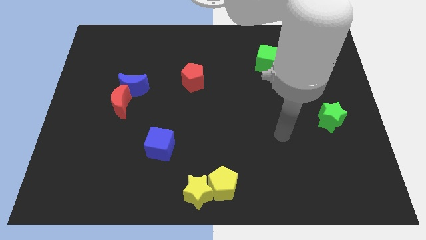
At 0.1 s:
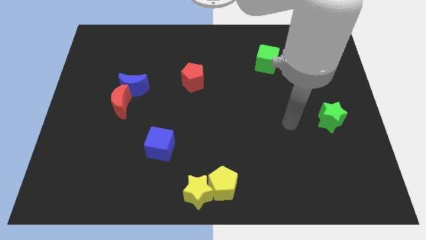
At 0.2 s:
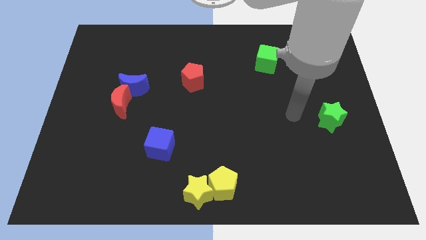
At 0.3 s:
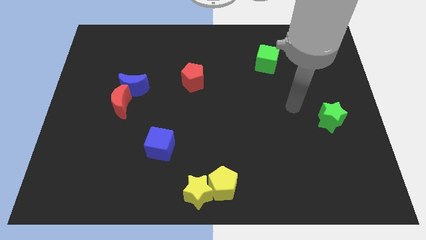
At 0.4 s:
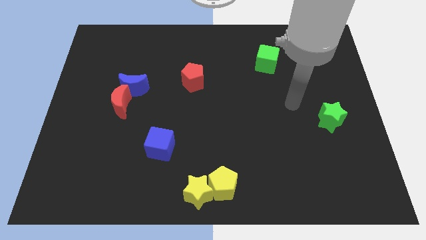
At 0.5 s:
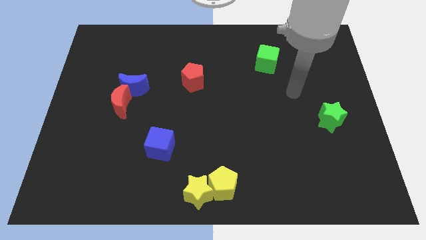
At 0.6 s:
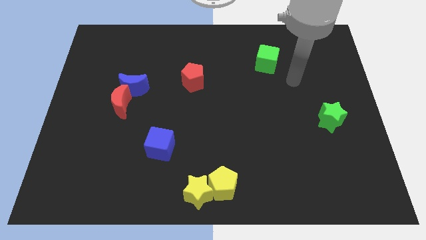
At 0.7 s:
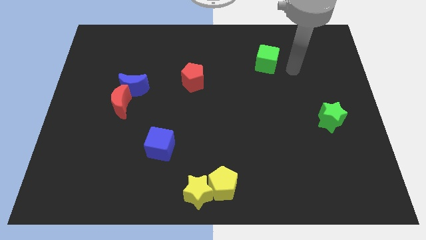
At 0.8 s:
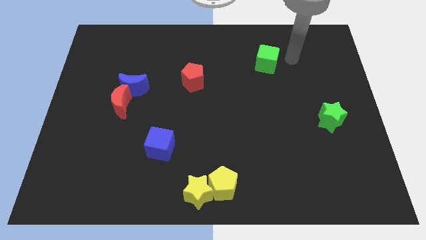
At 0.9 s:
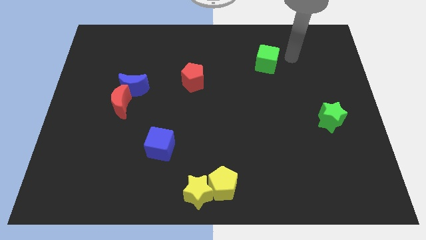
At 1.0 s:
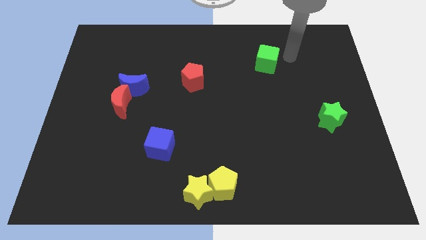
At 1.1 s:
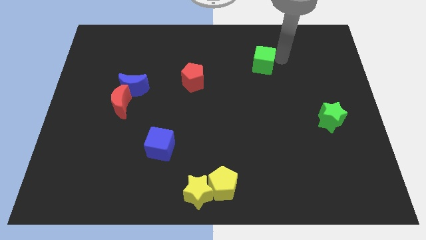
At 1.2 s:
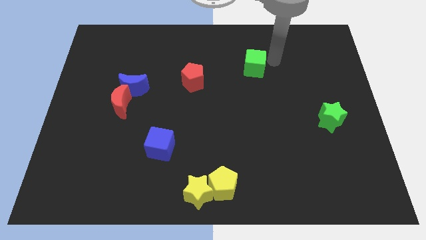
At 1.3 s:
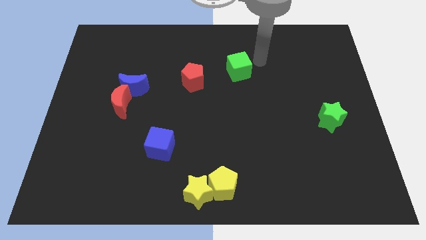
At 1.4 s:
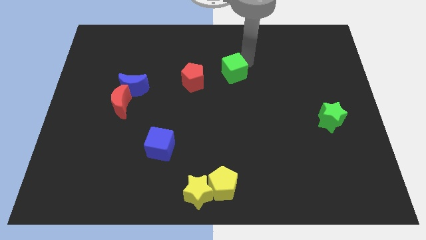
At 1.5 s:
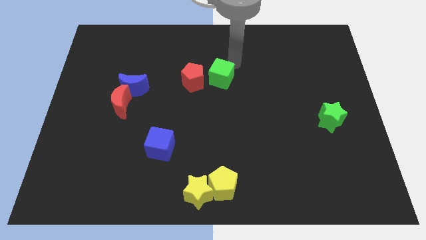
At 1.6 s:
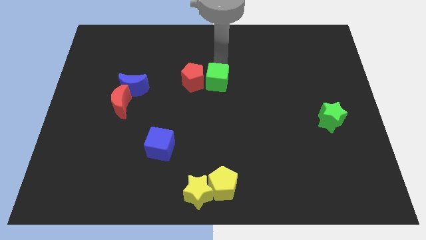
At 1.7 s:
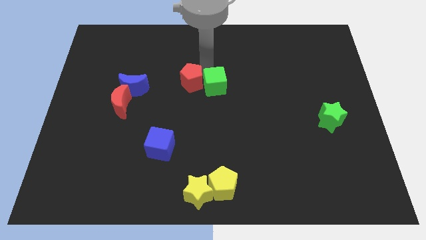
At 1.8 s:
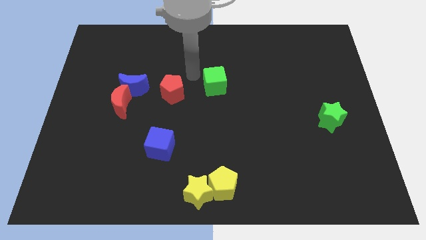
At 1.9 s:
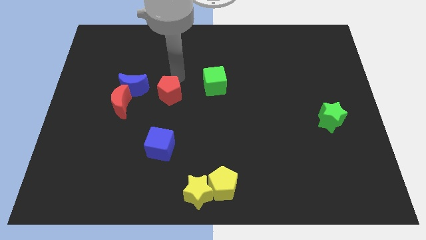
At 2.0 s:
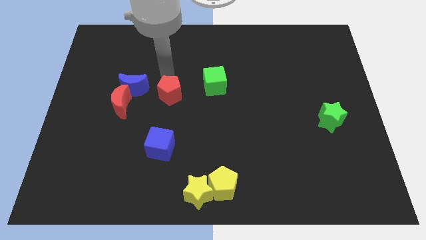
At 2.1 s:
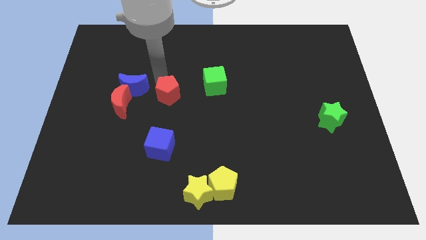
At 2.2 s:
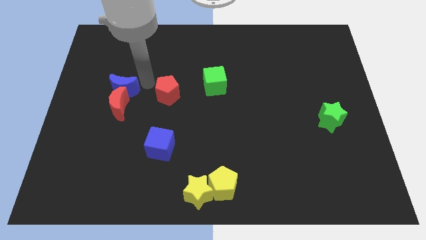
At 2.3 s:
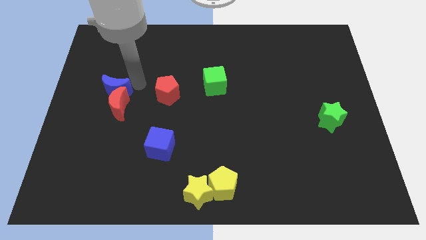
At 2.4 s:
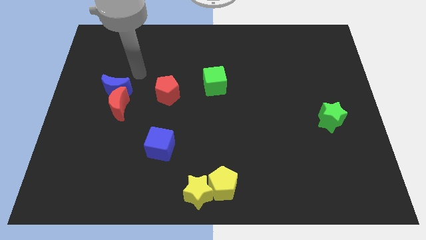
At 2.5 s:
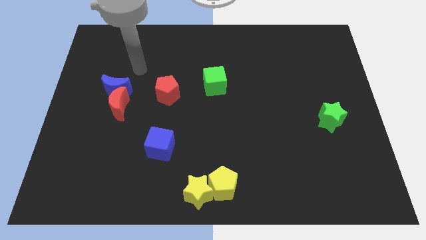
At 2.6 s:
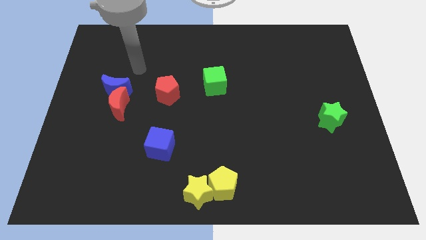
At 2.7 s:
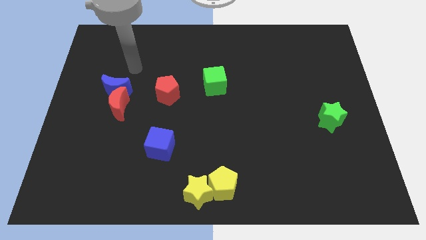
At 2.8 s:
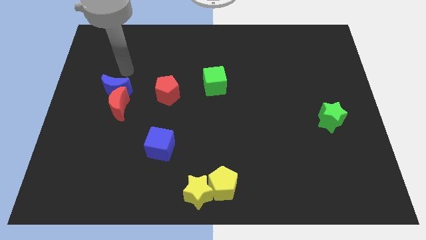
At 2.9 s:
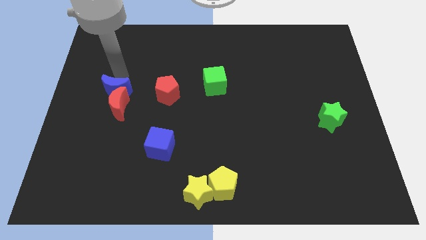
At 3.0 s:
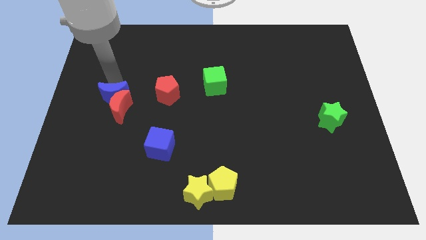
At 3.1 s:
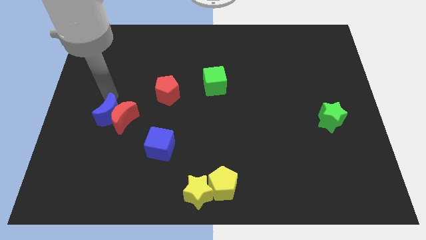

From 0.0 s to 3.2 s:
push blue crescent beside red crescent

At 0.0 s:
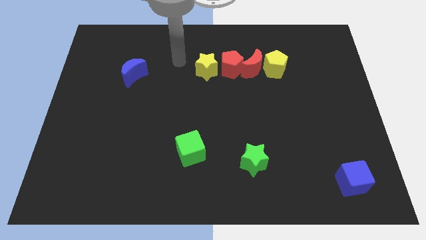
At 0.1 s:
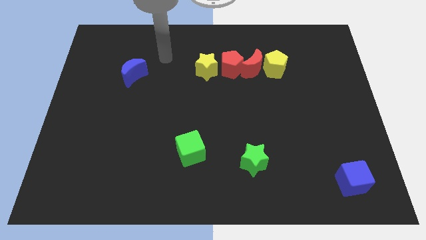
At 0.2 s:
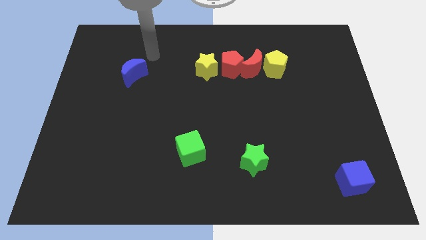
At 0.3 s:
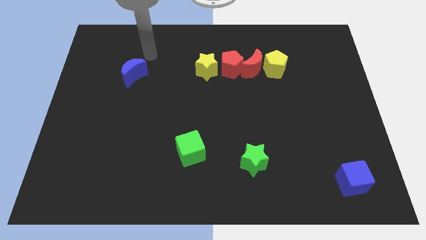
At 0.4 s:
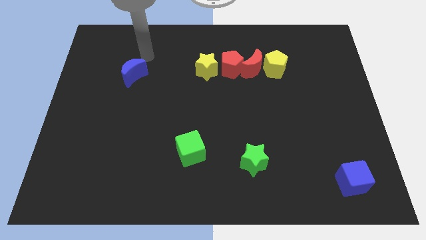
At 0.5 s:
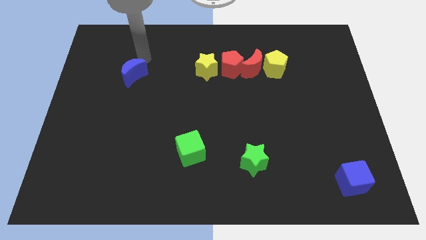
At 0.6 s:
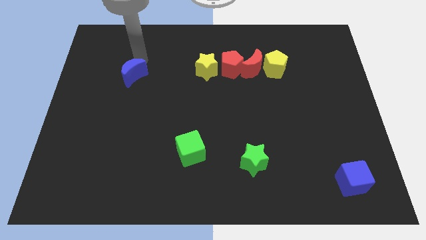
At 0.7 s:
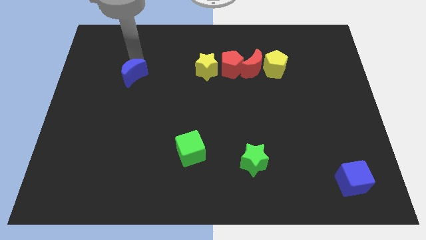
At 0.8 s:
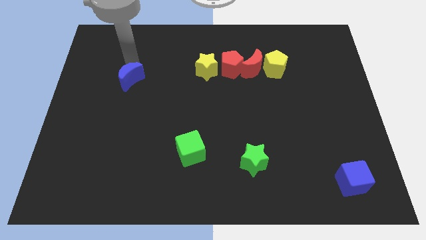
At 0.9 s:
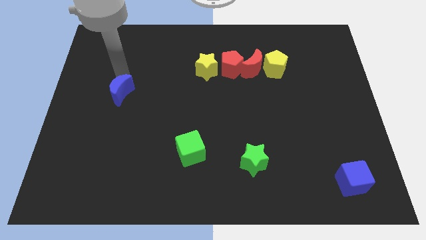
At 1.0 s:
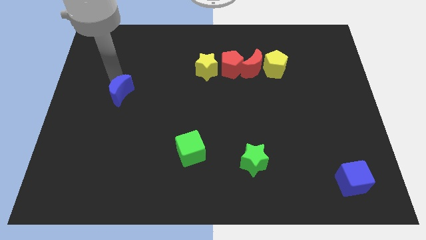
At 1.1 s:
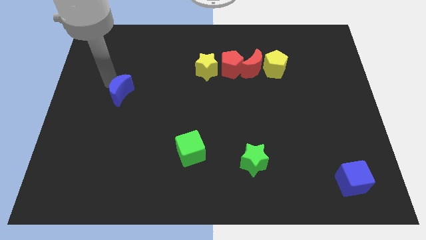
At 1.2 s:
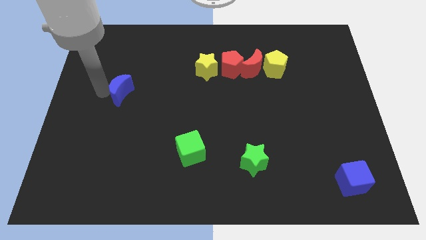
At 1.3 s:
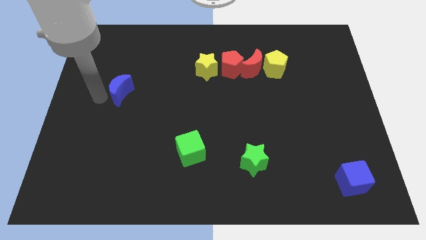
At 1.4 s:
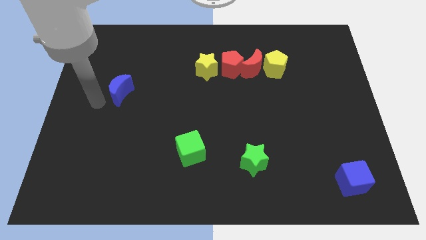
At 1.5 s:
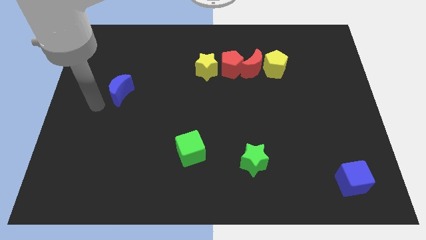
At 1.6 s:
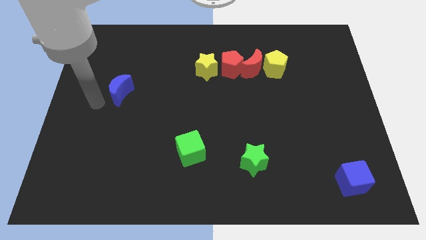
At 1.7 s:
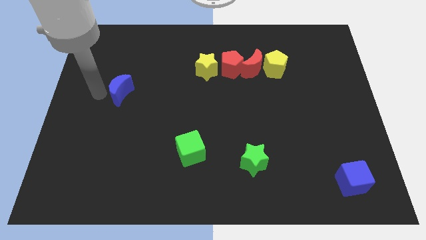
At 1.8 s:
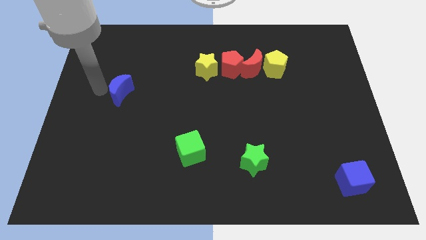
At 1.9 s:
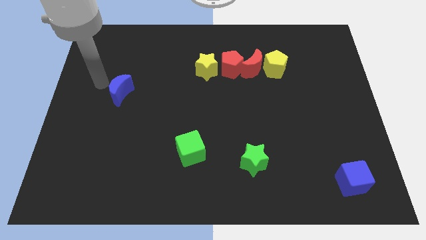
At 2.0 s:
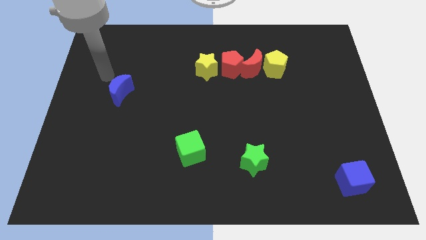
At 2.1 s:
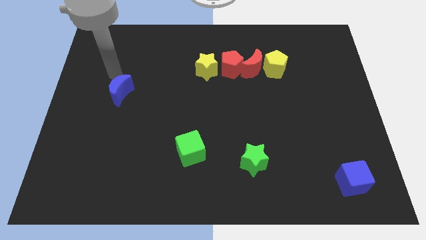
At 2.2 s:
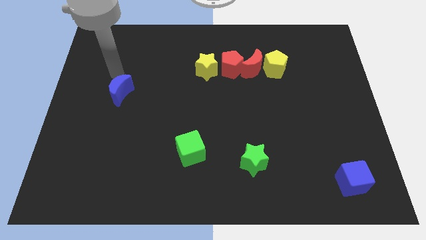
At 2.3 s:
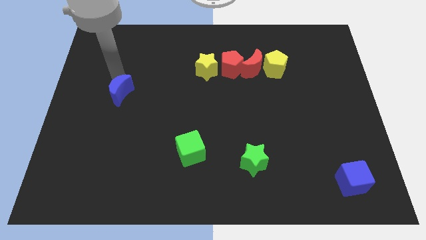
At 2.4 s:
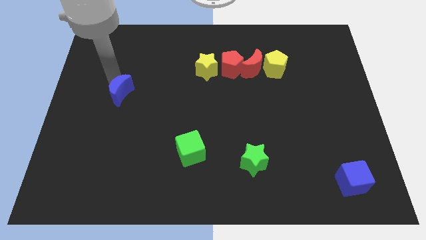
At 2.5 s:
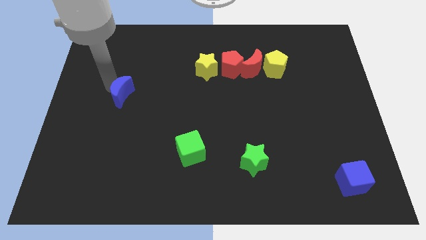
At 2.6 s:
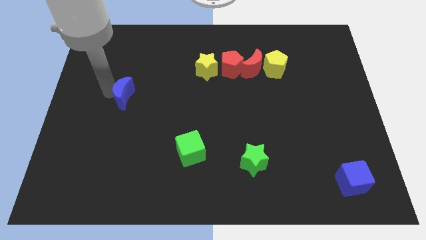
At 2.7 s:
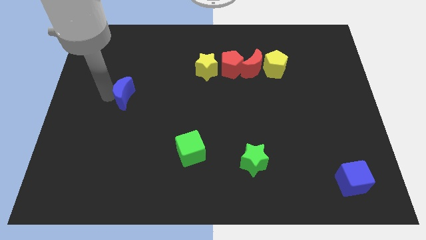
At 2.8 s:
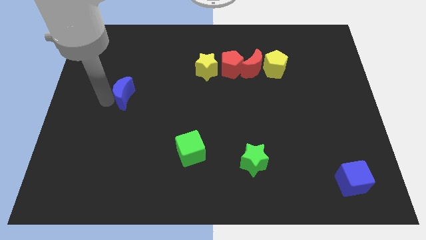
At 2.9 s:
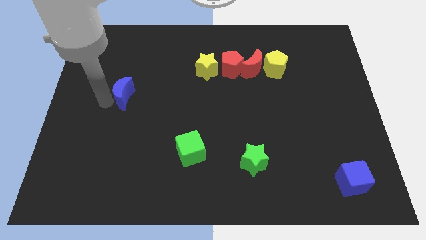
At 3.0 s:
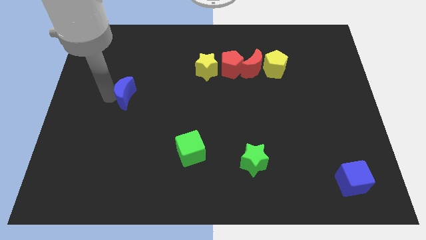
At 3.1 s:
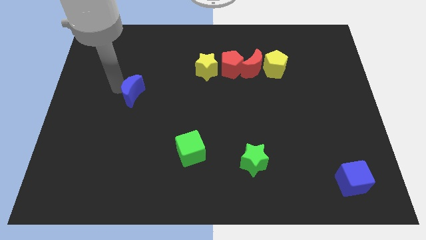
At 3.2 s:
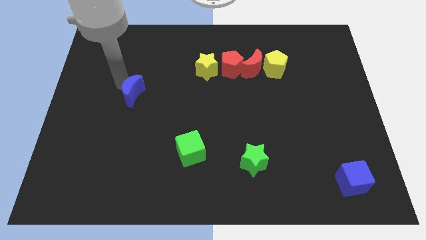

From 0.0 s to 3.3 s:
move the blue moon to the right side of the board

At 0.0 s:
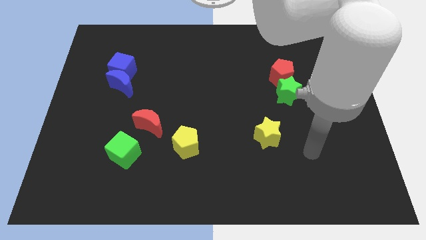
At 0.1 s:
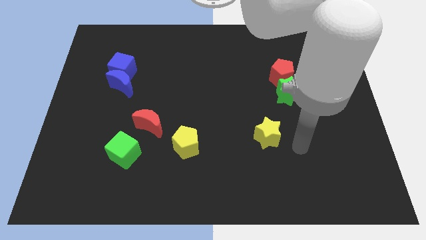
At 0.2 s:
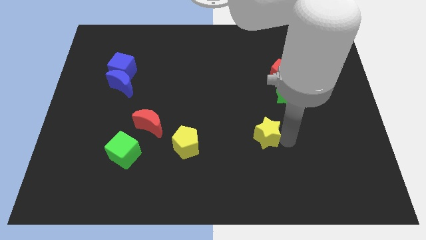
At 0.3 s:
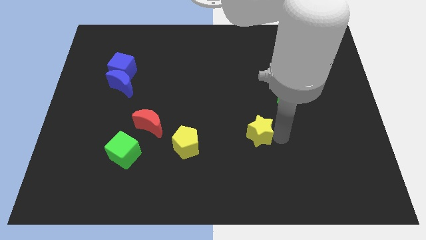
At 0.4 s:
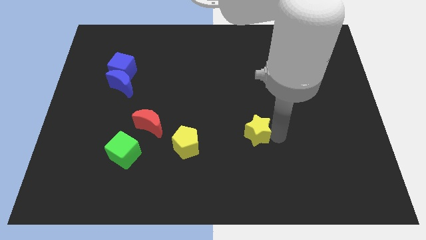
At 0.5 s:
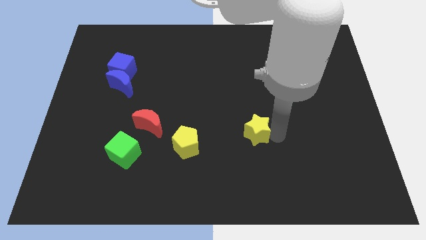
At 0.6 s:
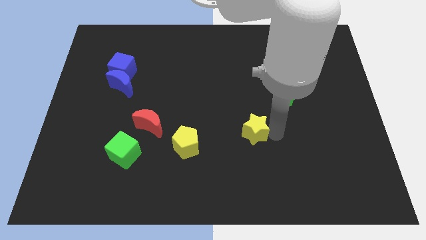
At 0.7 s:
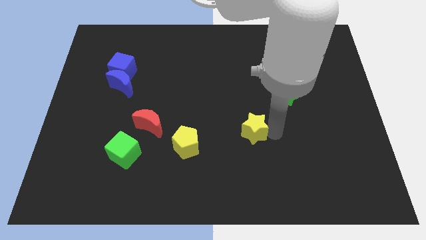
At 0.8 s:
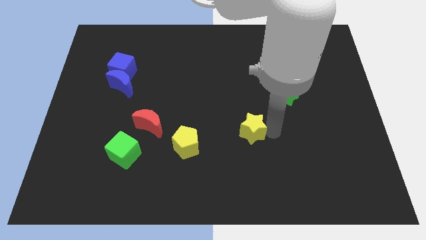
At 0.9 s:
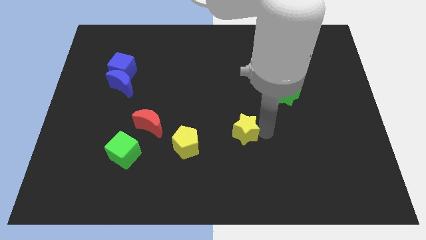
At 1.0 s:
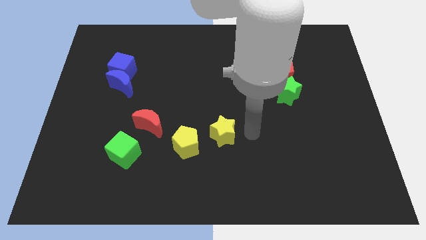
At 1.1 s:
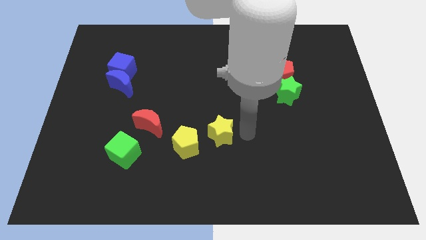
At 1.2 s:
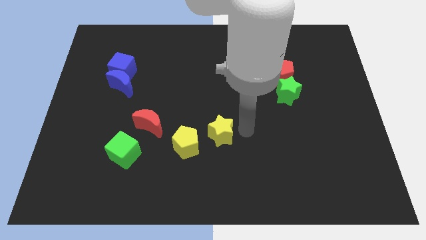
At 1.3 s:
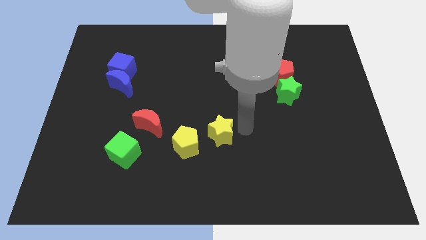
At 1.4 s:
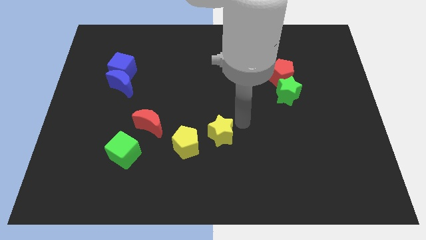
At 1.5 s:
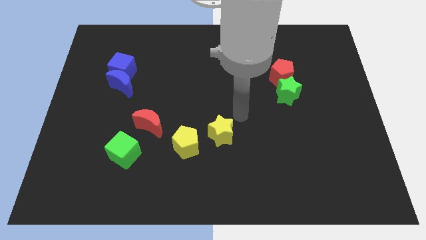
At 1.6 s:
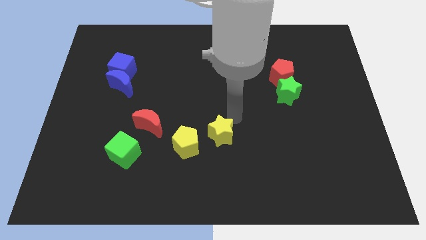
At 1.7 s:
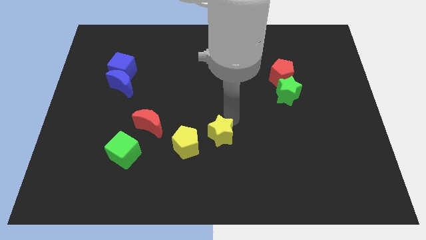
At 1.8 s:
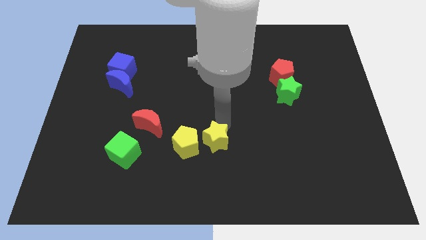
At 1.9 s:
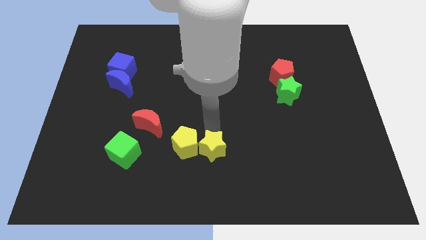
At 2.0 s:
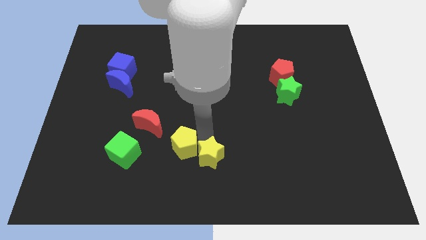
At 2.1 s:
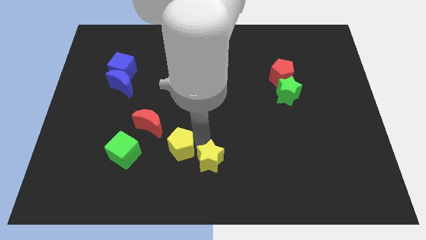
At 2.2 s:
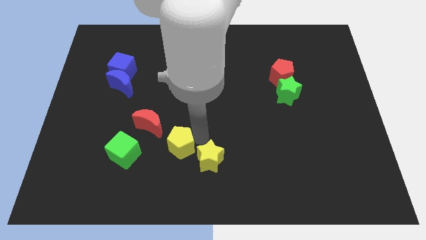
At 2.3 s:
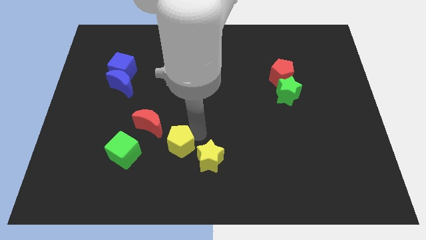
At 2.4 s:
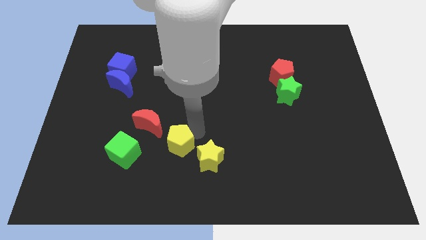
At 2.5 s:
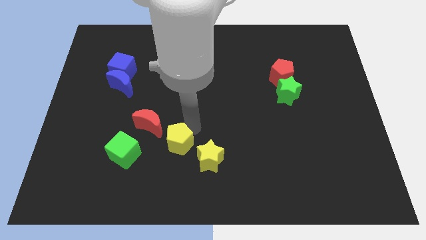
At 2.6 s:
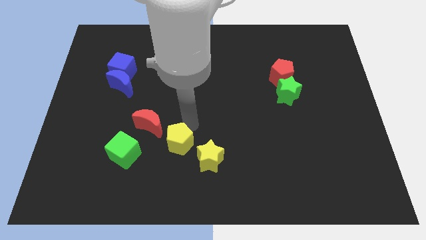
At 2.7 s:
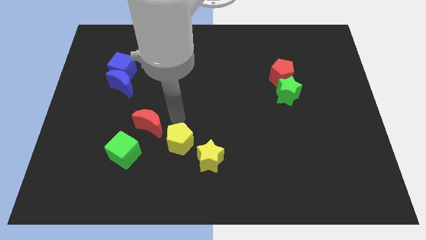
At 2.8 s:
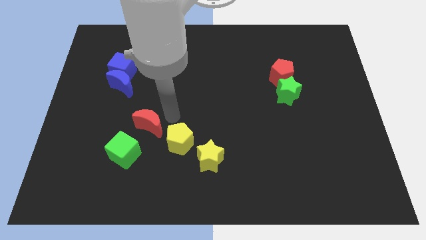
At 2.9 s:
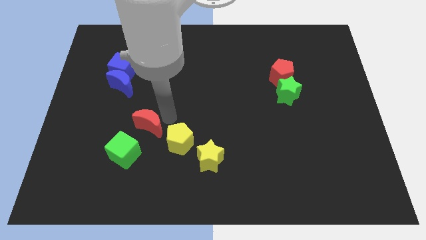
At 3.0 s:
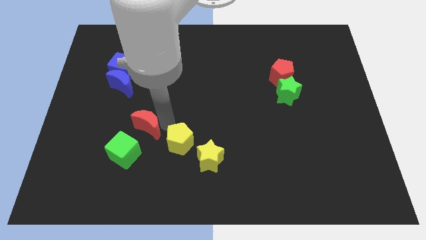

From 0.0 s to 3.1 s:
push the yellow star slightly downward
